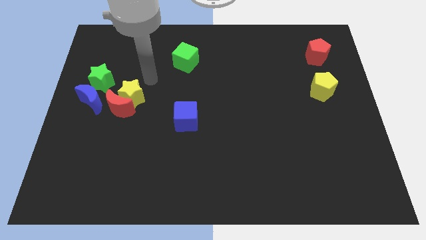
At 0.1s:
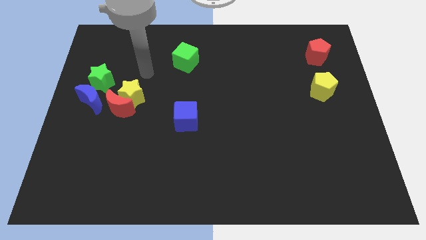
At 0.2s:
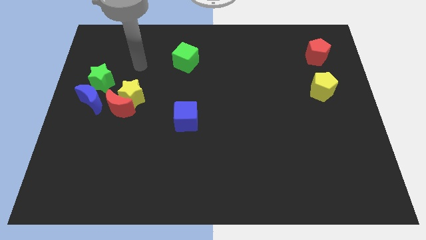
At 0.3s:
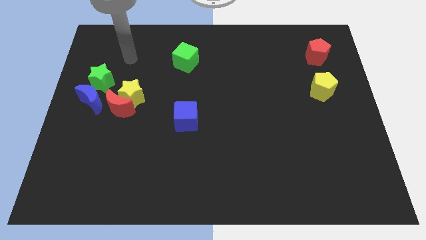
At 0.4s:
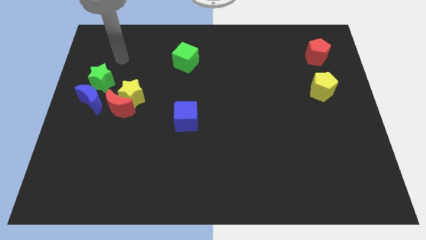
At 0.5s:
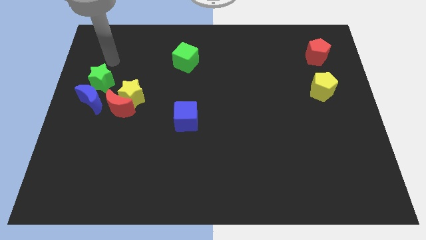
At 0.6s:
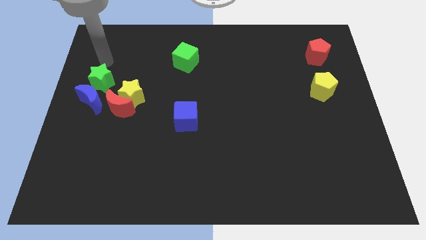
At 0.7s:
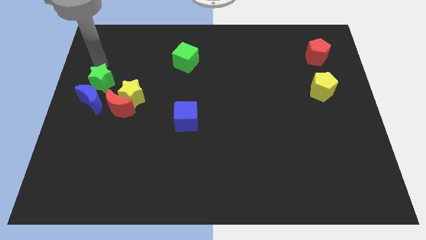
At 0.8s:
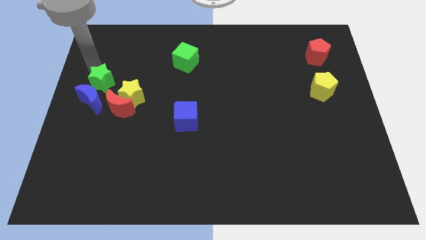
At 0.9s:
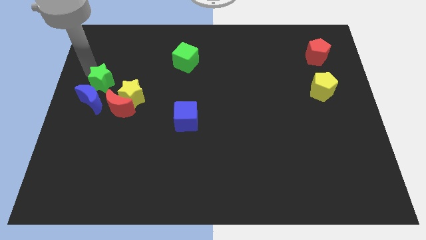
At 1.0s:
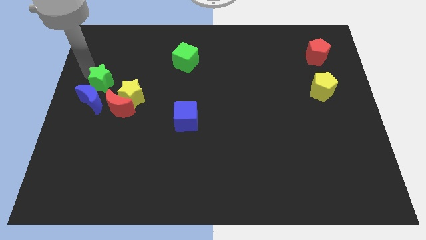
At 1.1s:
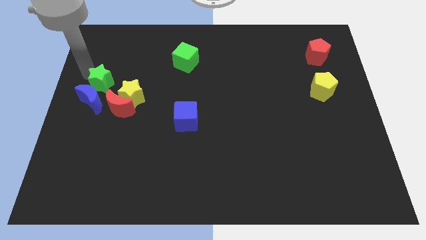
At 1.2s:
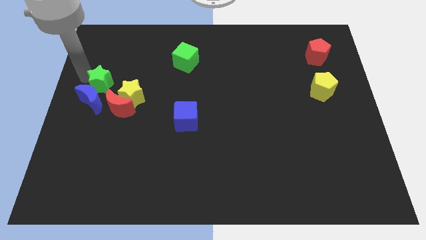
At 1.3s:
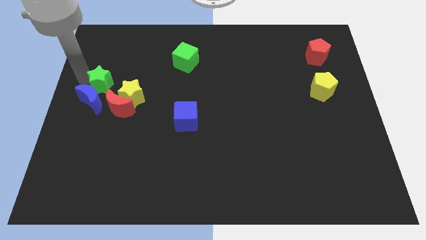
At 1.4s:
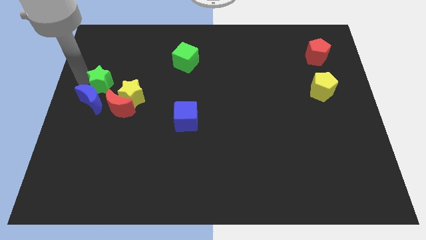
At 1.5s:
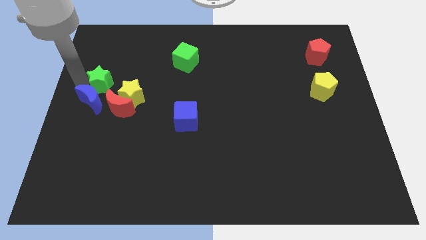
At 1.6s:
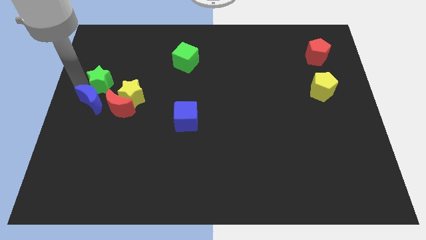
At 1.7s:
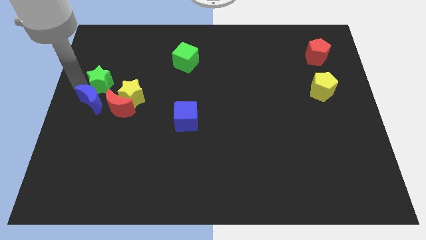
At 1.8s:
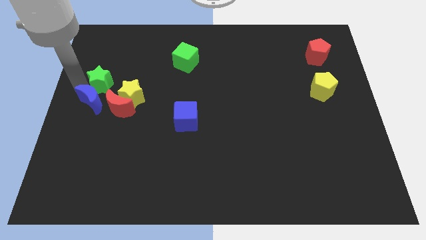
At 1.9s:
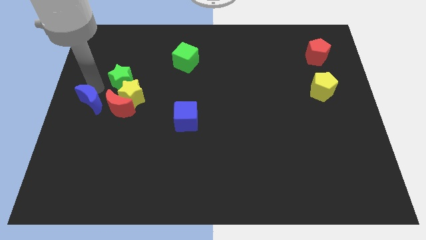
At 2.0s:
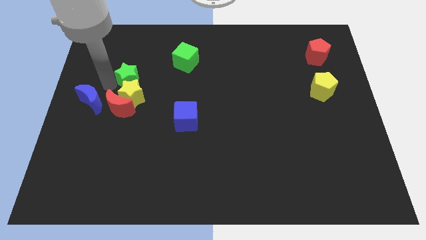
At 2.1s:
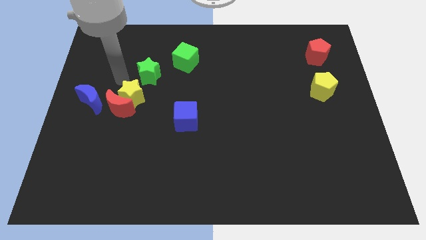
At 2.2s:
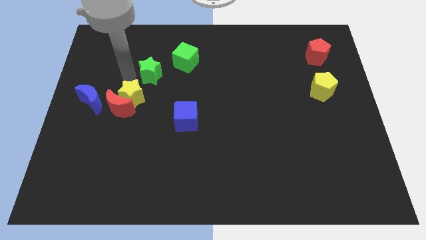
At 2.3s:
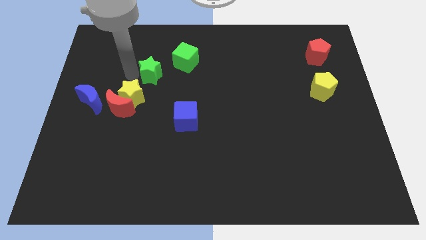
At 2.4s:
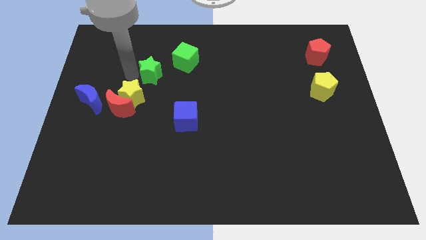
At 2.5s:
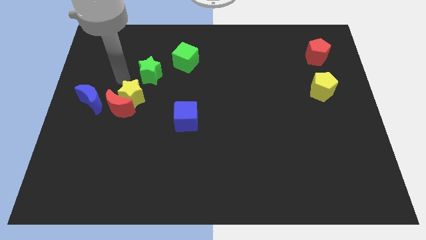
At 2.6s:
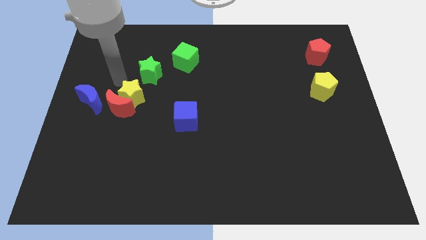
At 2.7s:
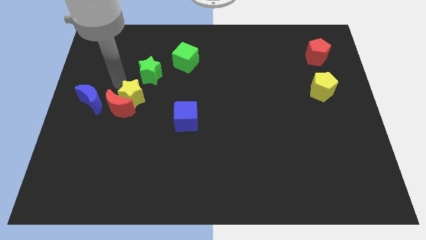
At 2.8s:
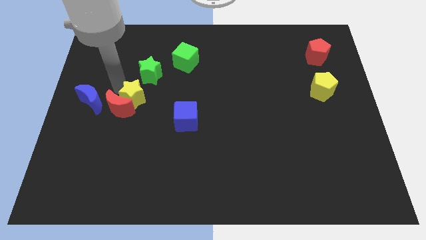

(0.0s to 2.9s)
move green star to the bottom left of green cube

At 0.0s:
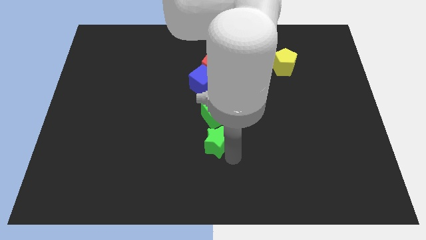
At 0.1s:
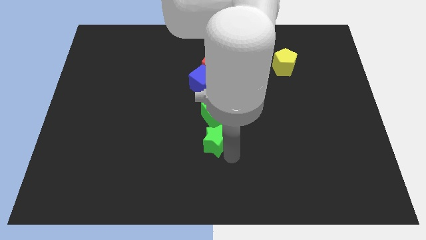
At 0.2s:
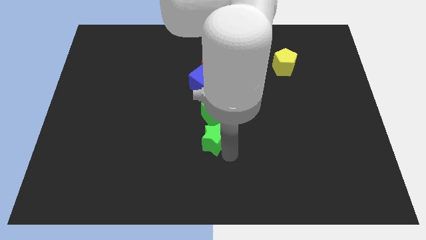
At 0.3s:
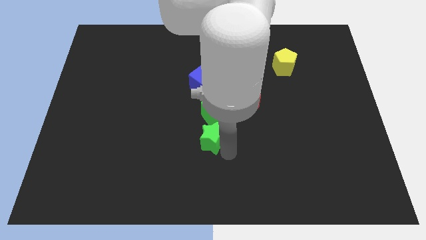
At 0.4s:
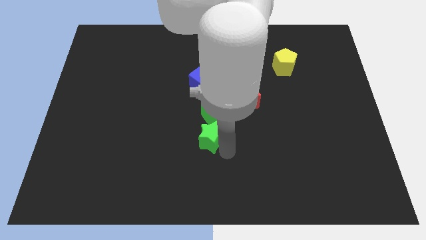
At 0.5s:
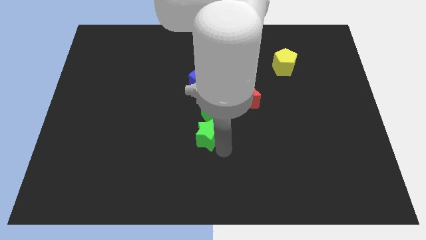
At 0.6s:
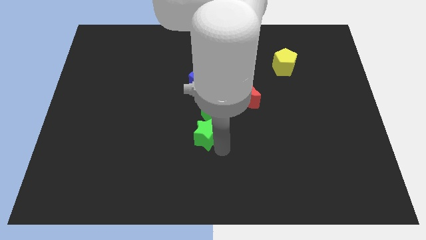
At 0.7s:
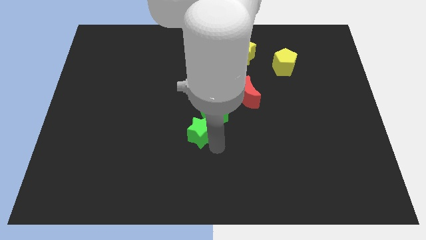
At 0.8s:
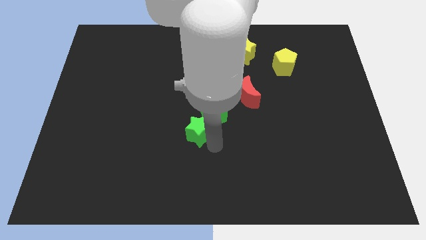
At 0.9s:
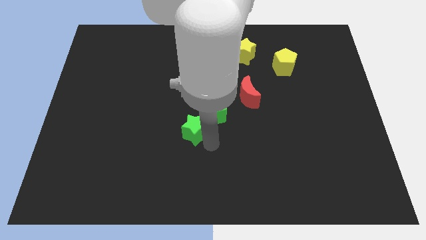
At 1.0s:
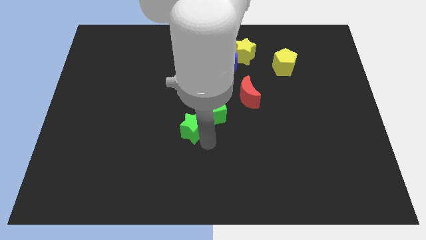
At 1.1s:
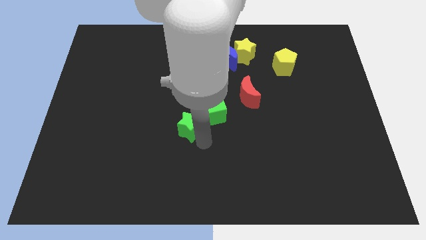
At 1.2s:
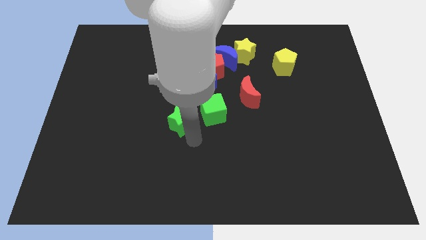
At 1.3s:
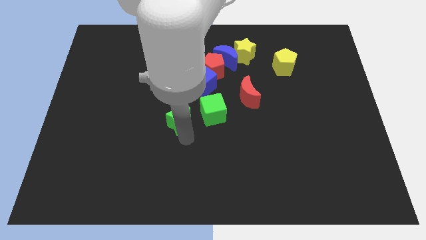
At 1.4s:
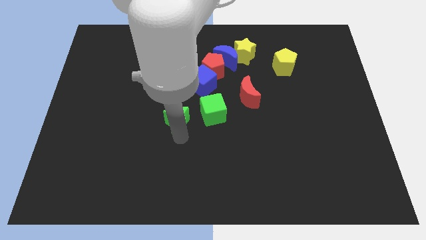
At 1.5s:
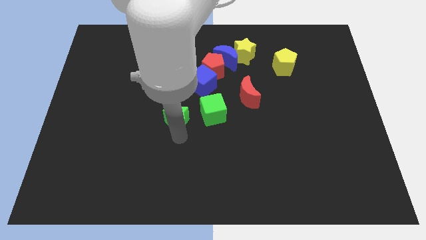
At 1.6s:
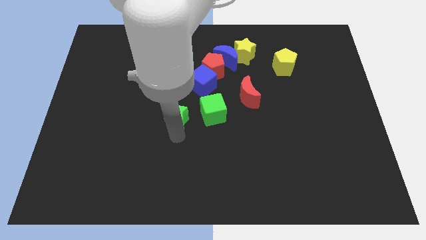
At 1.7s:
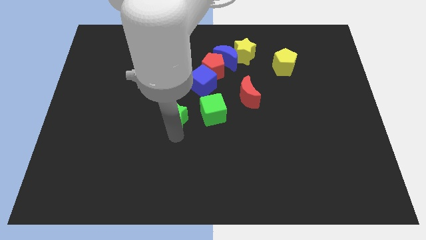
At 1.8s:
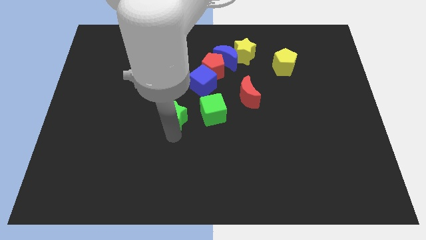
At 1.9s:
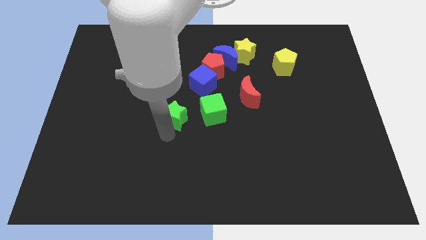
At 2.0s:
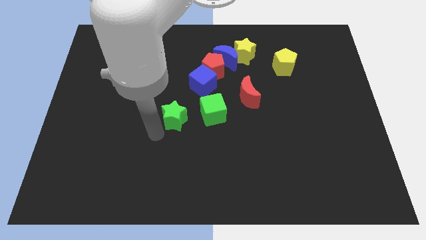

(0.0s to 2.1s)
slide green star to the left of green cube

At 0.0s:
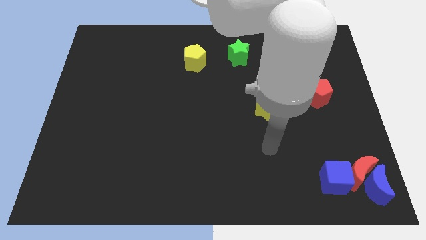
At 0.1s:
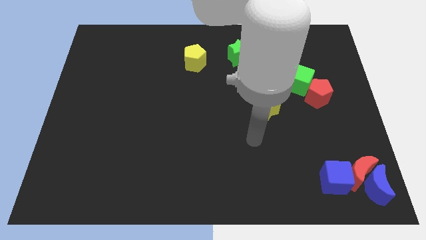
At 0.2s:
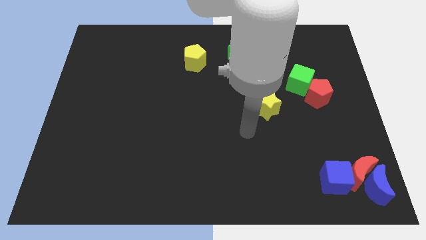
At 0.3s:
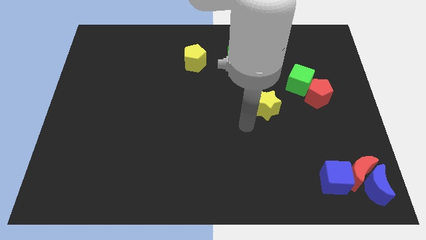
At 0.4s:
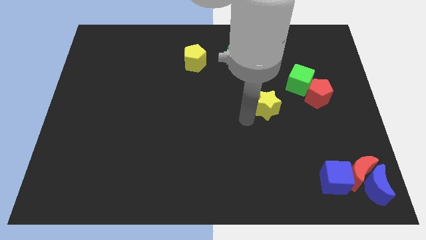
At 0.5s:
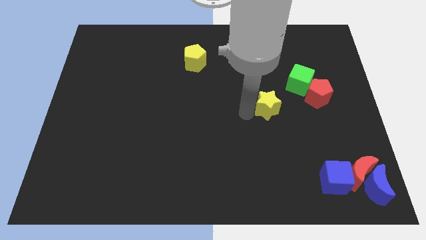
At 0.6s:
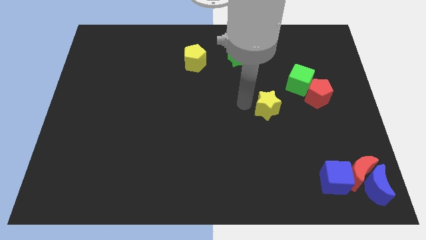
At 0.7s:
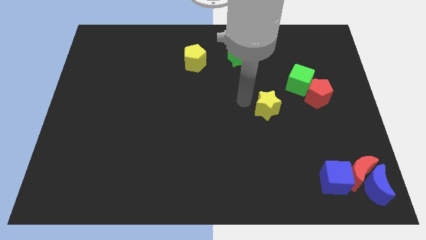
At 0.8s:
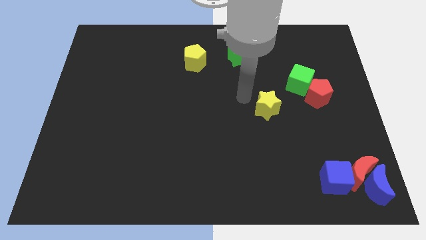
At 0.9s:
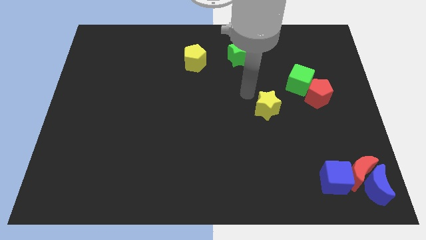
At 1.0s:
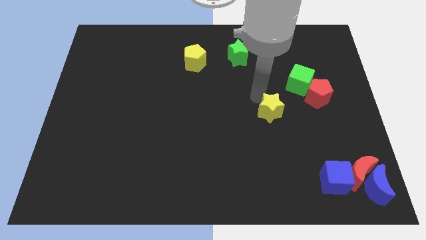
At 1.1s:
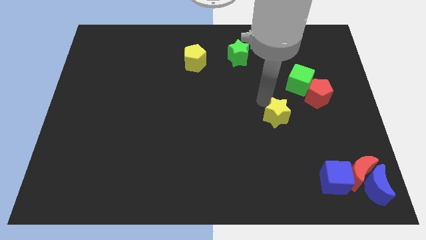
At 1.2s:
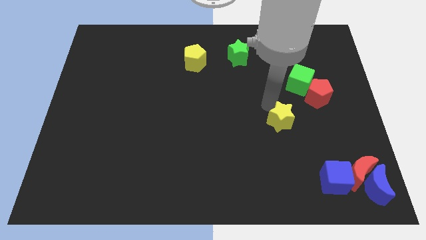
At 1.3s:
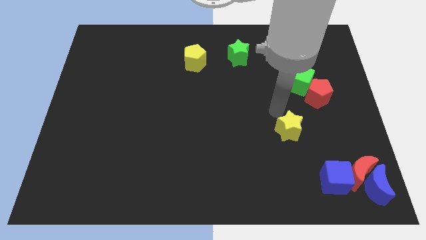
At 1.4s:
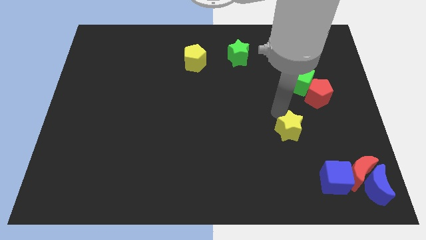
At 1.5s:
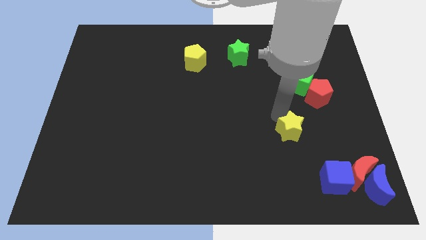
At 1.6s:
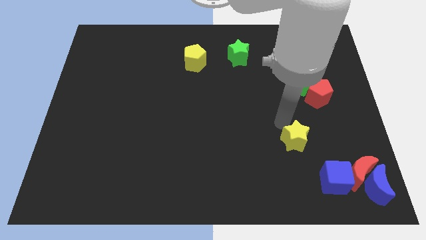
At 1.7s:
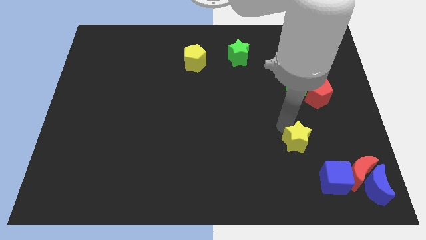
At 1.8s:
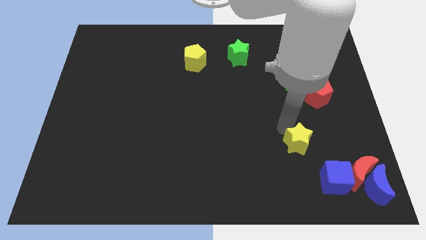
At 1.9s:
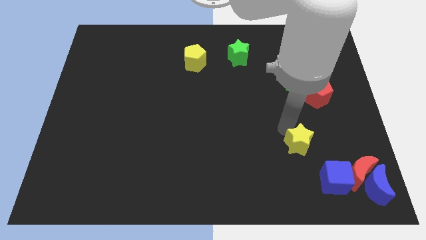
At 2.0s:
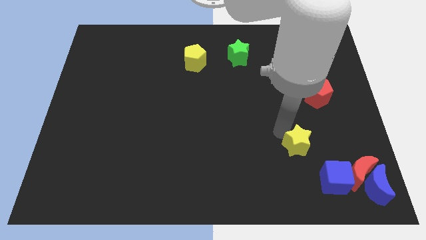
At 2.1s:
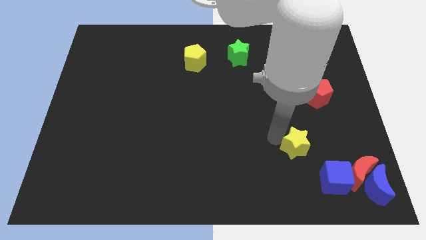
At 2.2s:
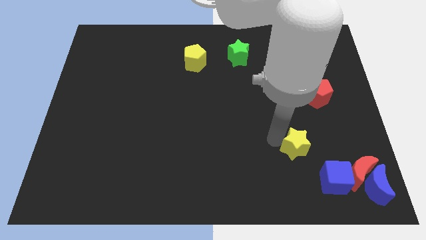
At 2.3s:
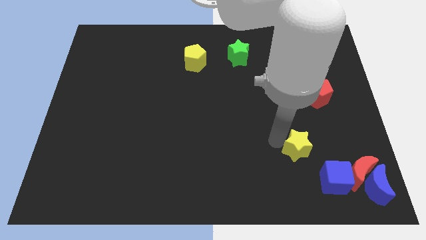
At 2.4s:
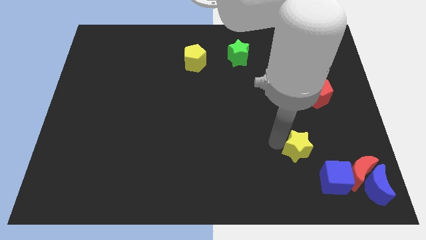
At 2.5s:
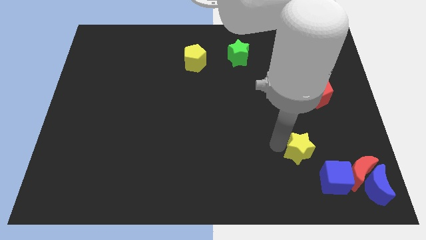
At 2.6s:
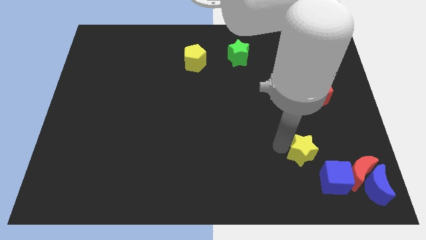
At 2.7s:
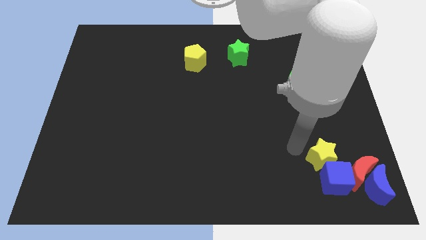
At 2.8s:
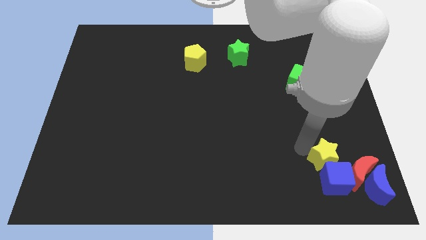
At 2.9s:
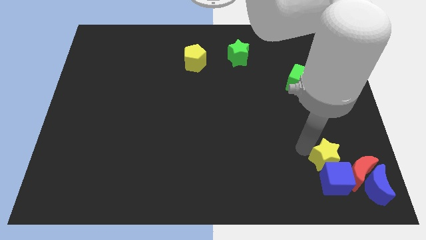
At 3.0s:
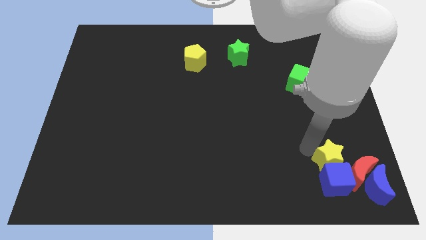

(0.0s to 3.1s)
add yellow star on top of blue cube

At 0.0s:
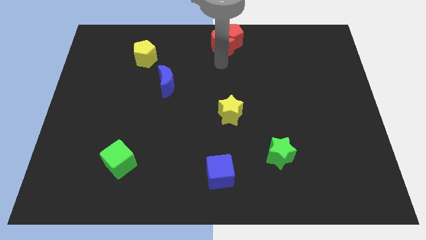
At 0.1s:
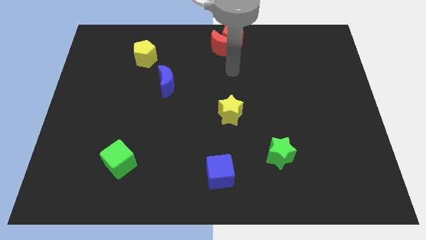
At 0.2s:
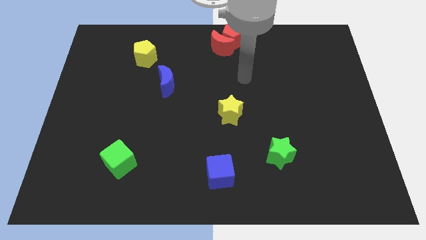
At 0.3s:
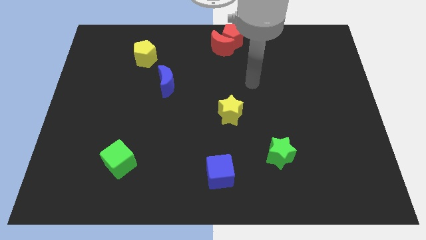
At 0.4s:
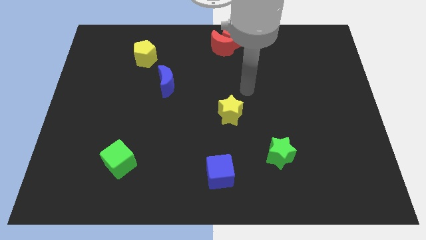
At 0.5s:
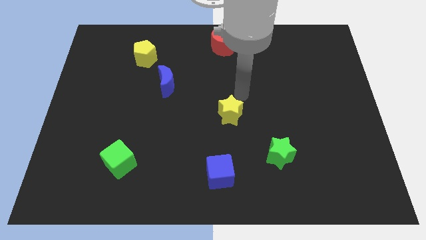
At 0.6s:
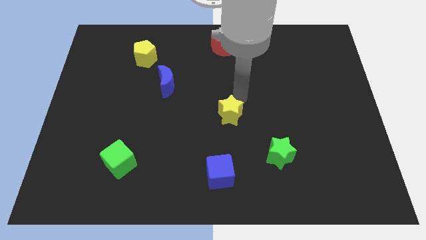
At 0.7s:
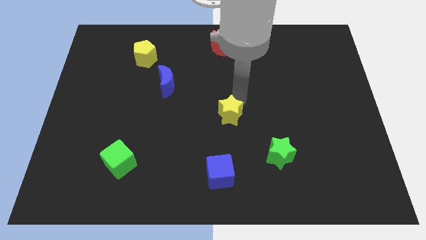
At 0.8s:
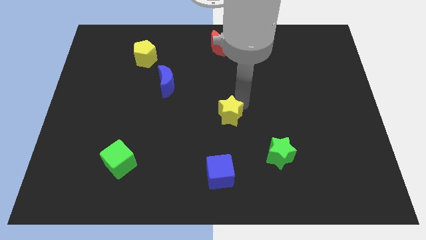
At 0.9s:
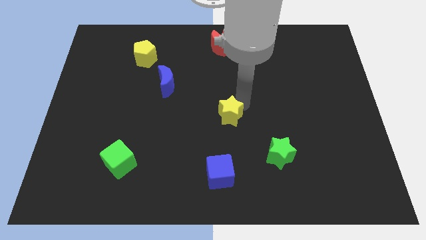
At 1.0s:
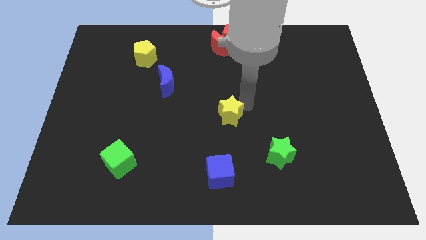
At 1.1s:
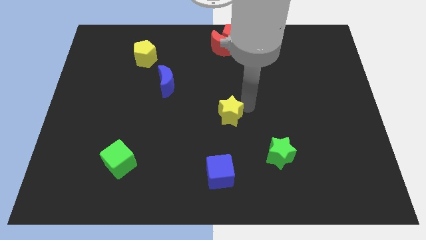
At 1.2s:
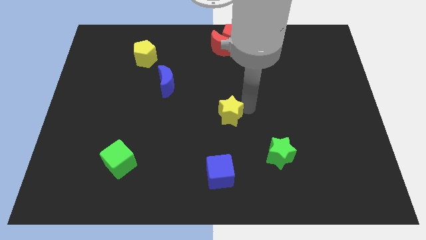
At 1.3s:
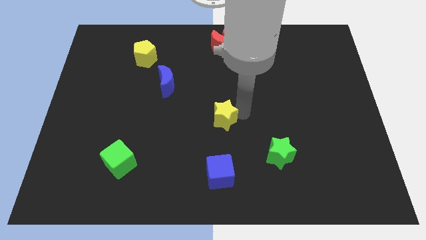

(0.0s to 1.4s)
slightly moved the yellow star to the center of the board
